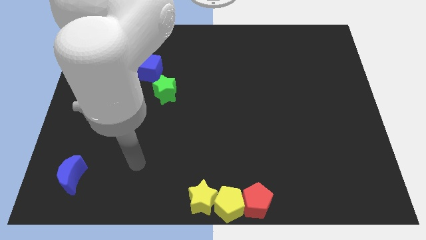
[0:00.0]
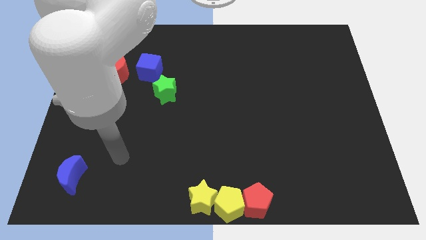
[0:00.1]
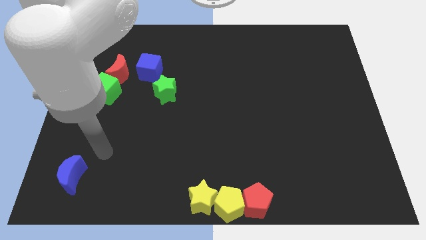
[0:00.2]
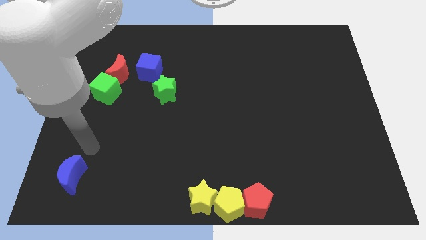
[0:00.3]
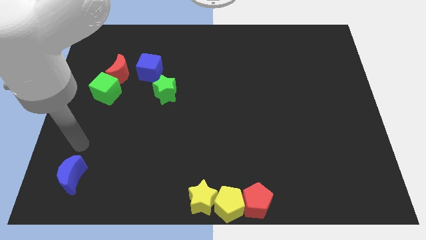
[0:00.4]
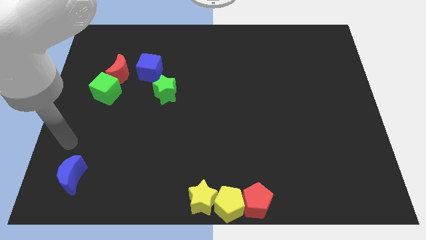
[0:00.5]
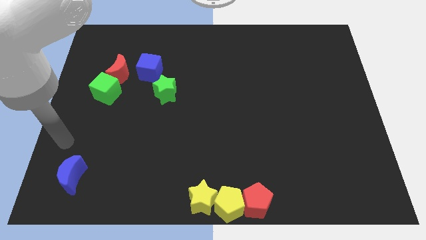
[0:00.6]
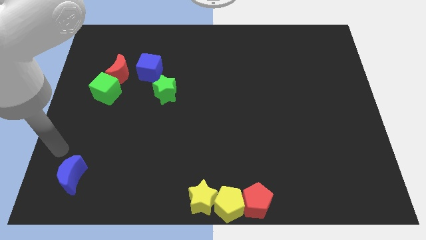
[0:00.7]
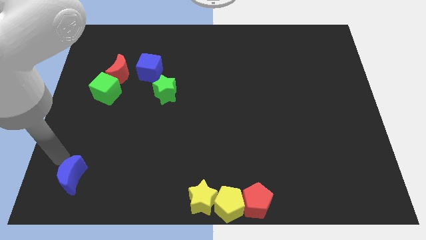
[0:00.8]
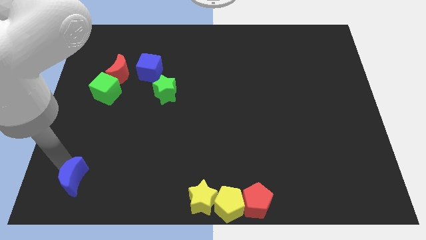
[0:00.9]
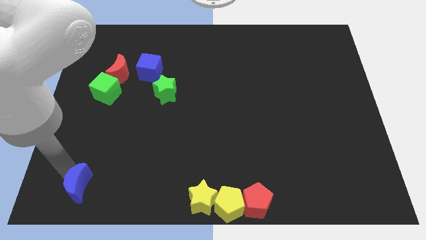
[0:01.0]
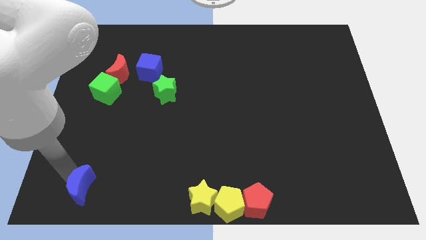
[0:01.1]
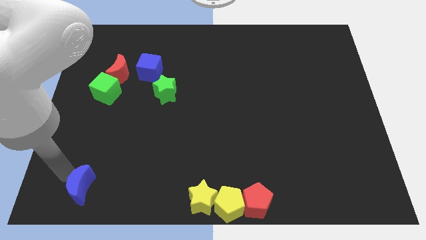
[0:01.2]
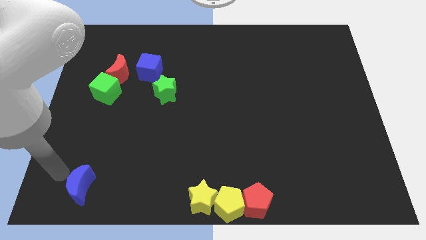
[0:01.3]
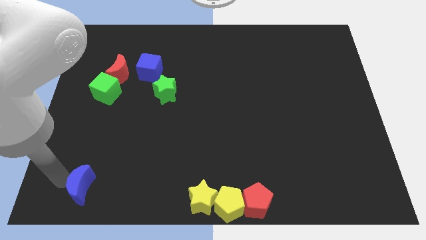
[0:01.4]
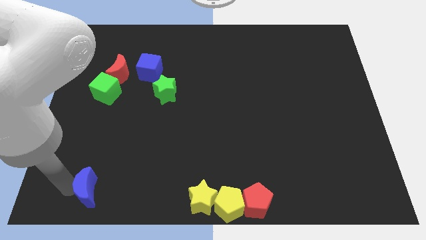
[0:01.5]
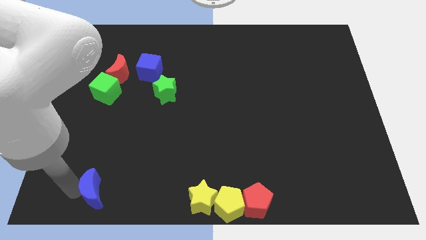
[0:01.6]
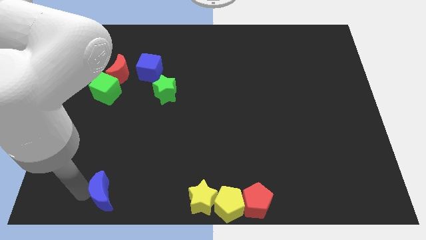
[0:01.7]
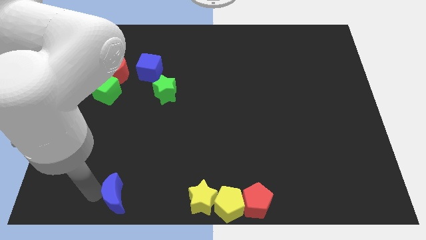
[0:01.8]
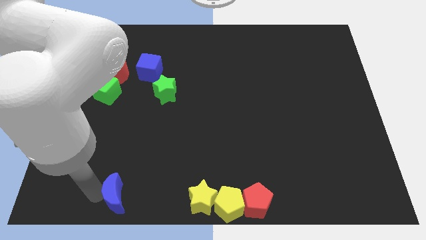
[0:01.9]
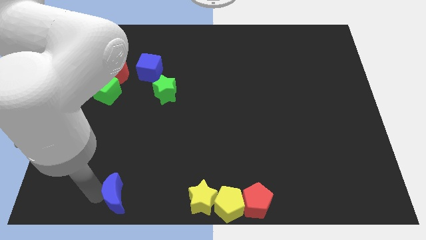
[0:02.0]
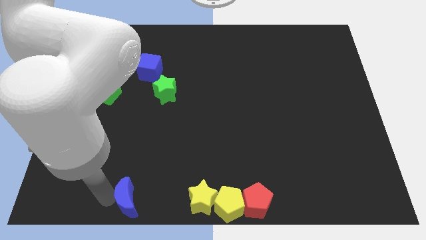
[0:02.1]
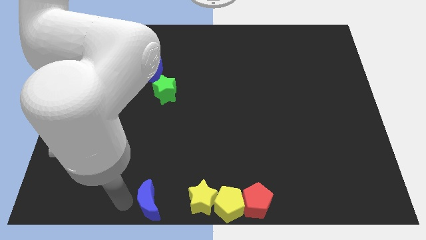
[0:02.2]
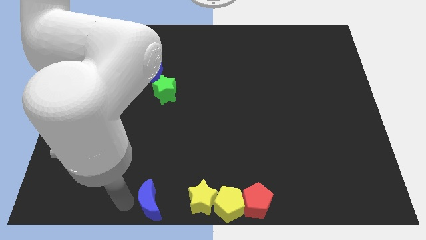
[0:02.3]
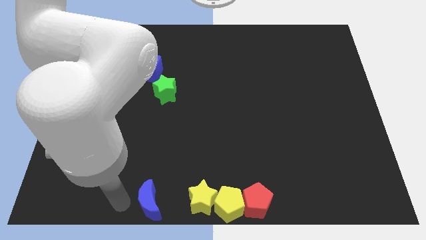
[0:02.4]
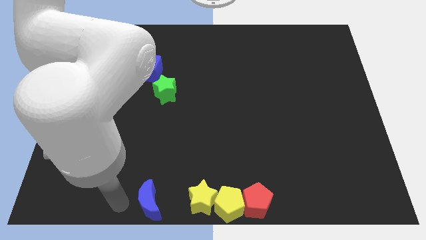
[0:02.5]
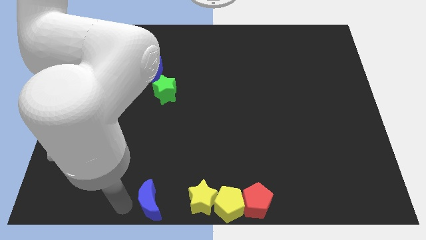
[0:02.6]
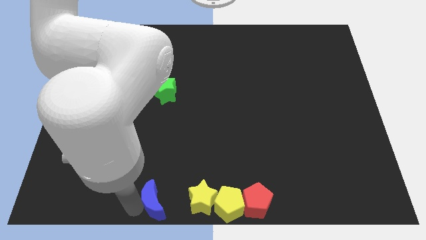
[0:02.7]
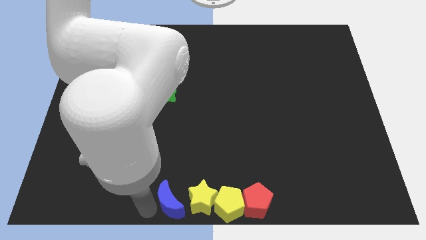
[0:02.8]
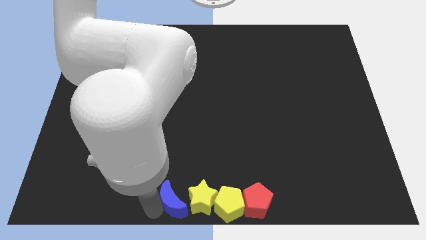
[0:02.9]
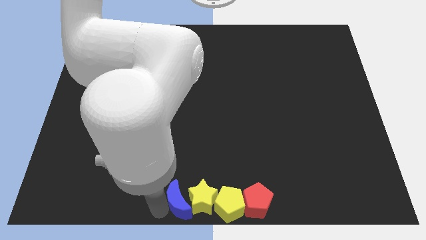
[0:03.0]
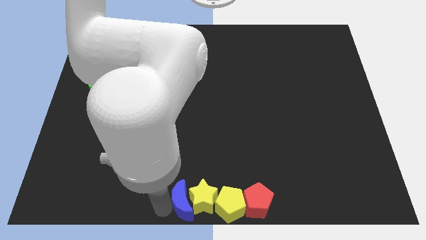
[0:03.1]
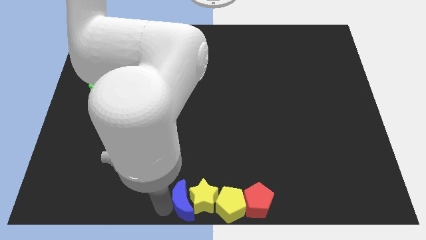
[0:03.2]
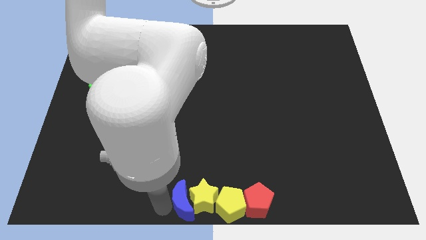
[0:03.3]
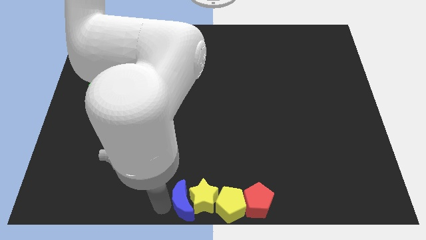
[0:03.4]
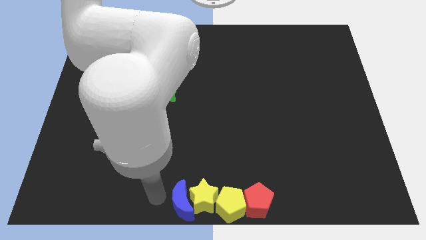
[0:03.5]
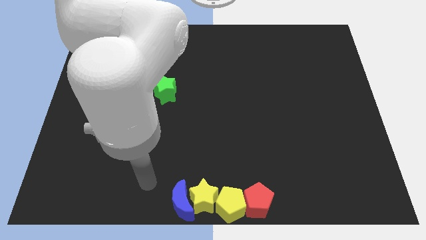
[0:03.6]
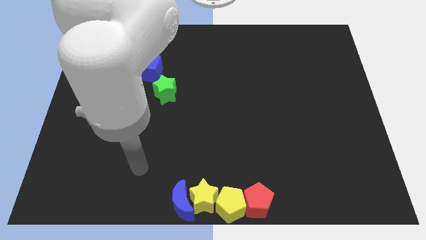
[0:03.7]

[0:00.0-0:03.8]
move the blue crescent to the left of the yellow star

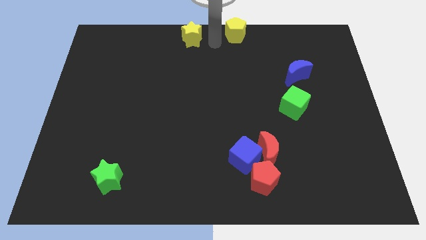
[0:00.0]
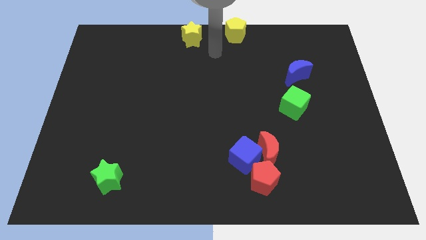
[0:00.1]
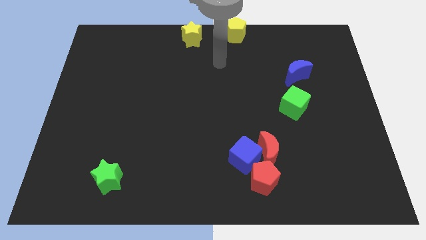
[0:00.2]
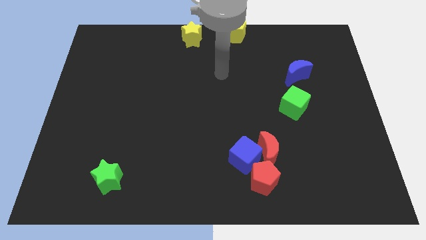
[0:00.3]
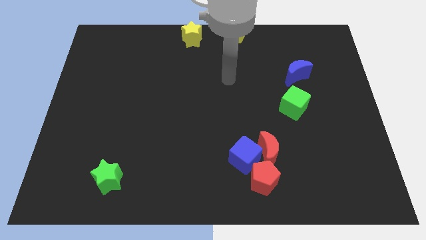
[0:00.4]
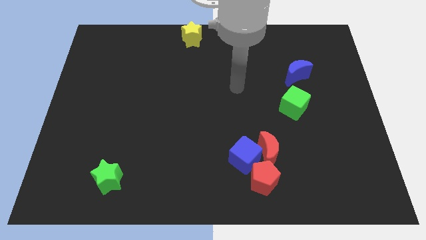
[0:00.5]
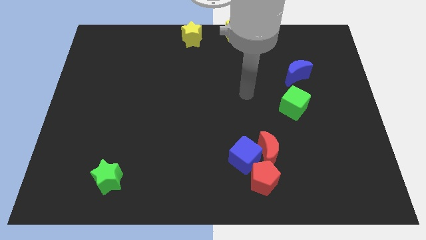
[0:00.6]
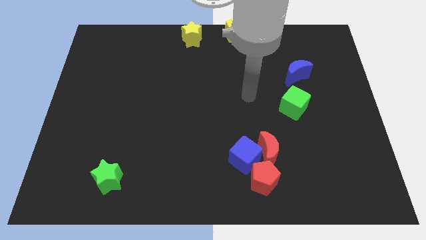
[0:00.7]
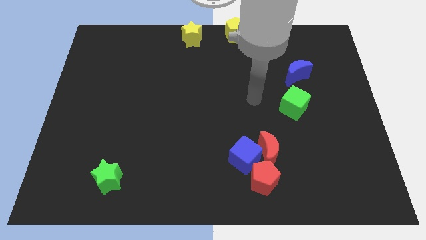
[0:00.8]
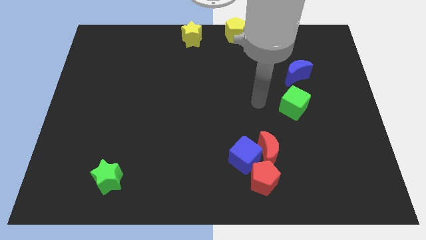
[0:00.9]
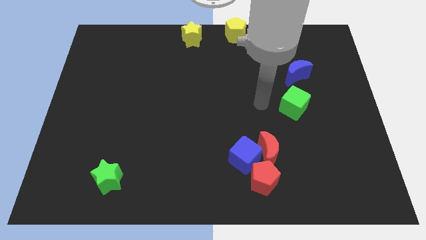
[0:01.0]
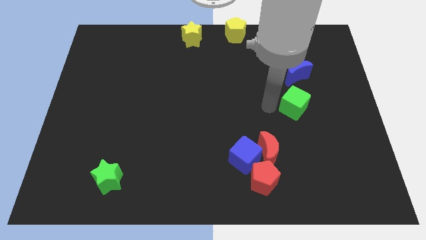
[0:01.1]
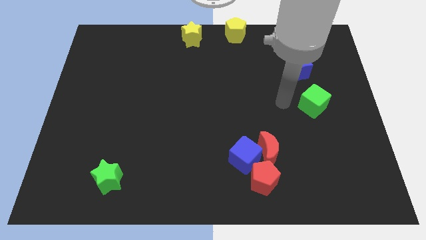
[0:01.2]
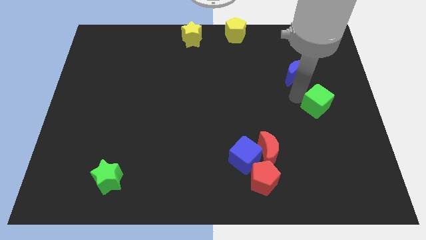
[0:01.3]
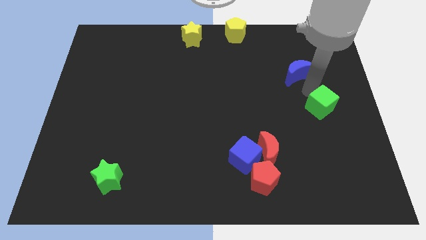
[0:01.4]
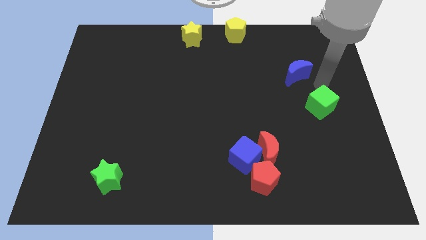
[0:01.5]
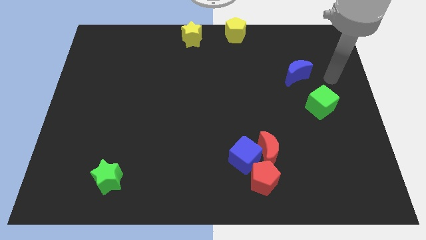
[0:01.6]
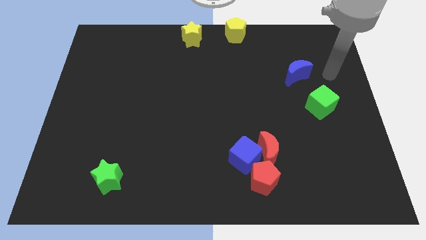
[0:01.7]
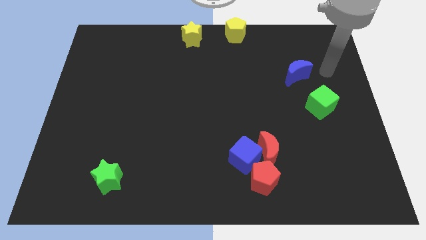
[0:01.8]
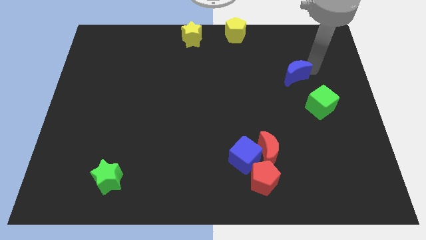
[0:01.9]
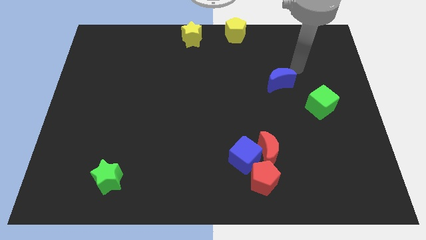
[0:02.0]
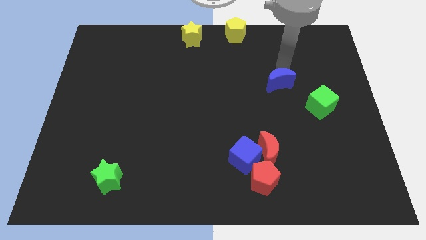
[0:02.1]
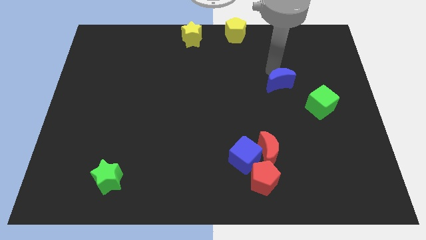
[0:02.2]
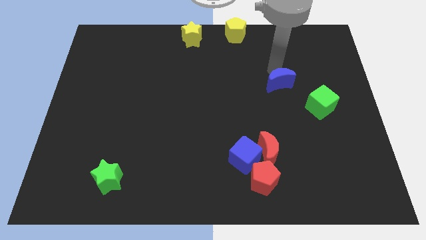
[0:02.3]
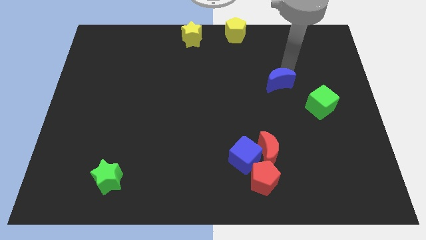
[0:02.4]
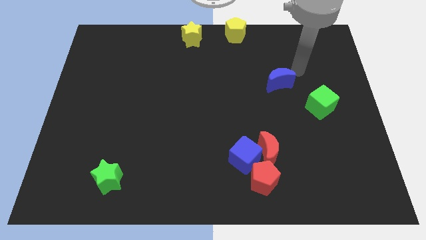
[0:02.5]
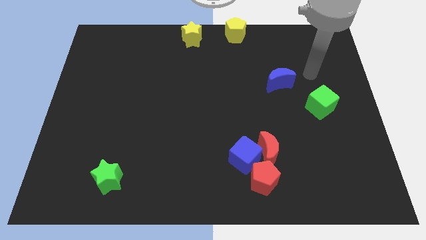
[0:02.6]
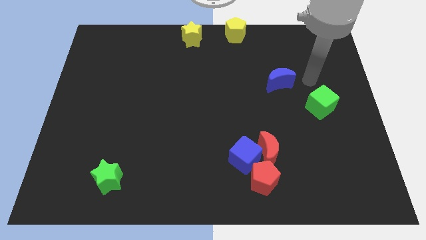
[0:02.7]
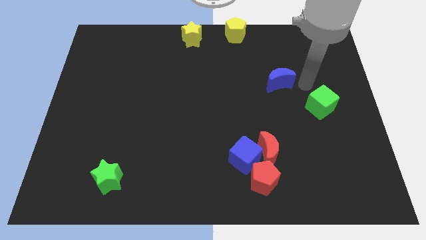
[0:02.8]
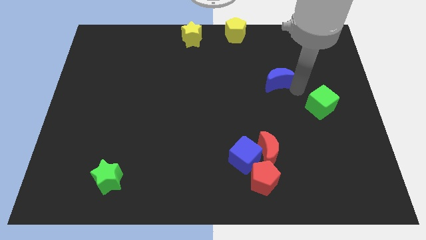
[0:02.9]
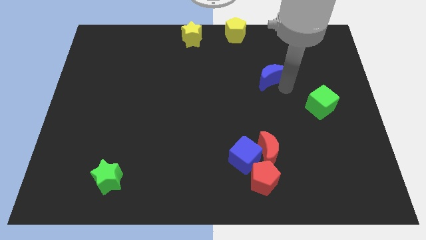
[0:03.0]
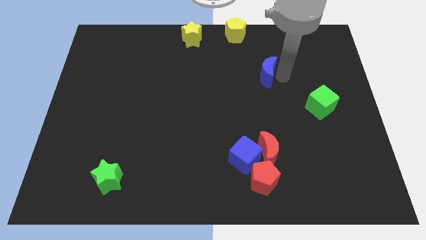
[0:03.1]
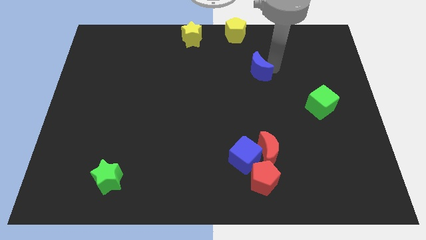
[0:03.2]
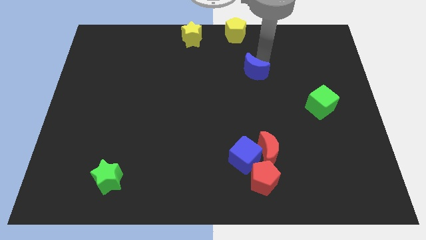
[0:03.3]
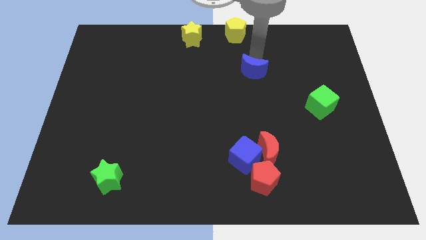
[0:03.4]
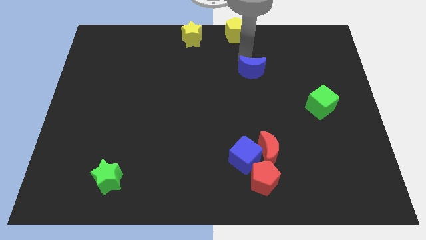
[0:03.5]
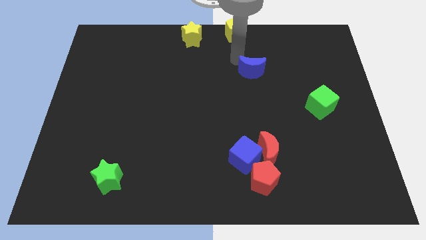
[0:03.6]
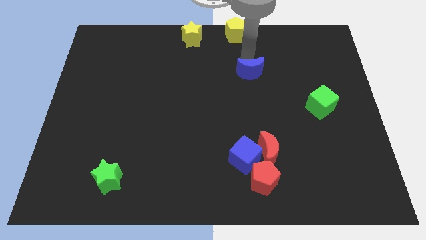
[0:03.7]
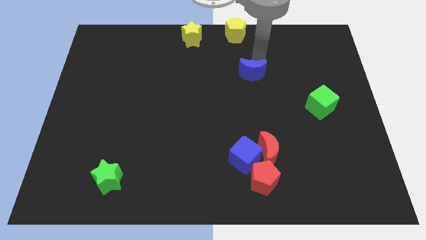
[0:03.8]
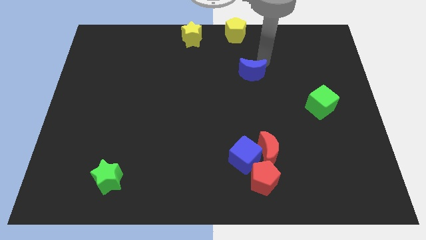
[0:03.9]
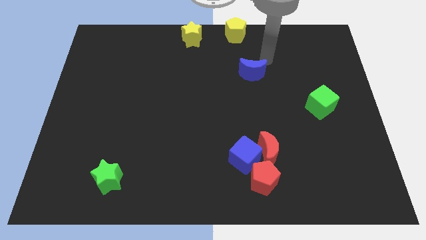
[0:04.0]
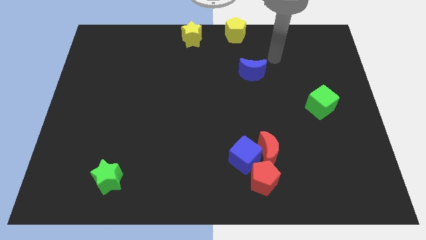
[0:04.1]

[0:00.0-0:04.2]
slide blue moon to bottom right of yellow pentagon

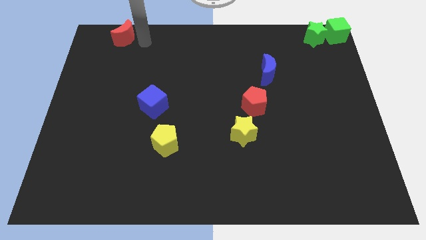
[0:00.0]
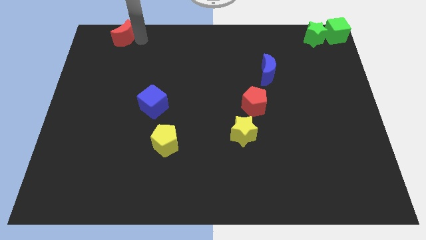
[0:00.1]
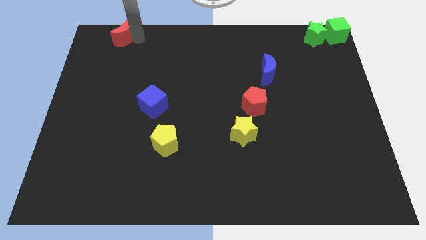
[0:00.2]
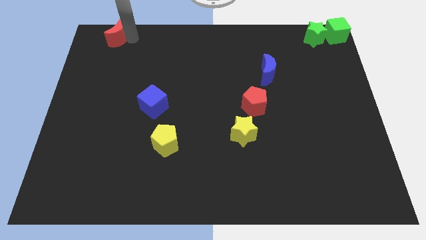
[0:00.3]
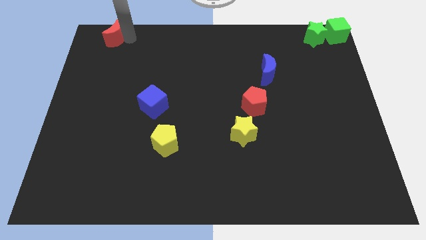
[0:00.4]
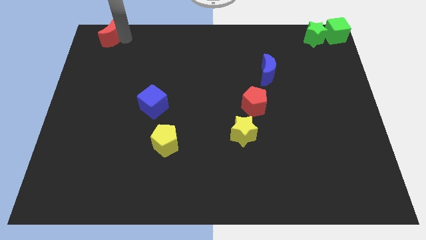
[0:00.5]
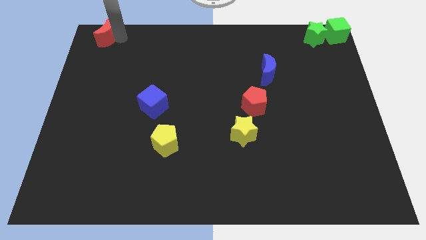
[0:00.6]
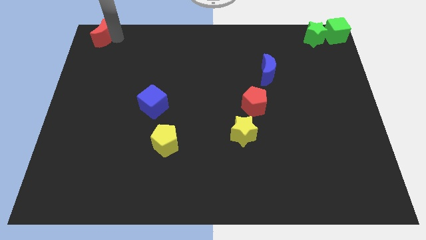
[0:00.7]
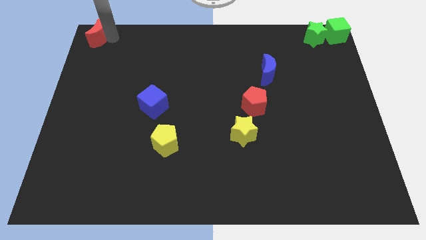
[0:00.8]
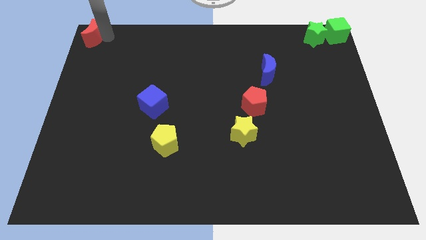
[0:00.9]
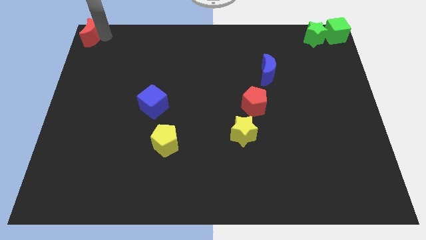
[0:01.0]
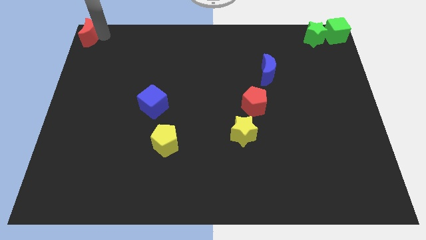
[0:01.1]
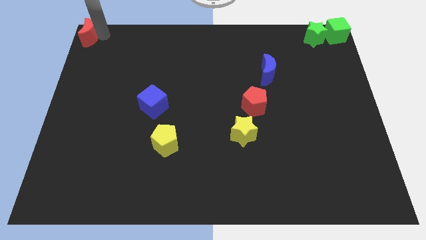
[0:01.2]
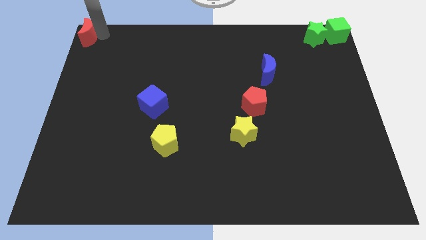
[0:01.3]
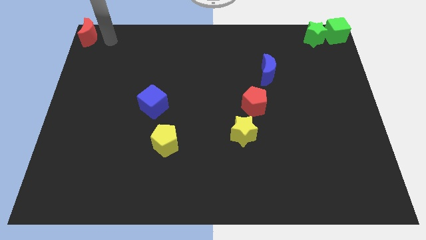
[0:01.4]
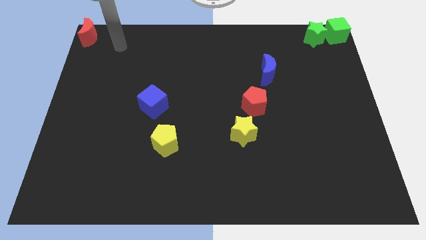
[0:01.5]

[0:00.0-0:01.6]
move the red crescent to the top left of the board
